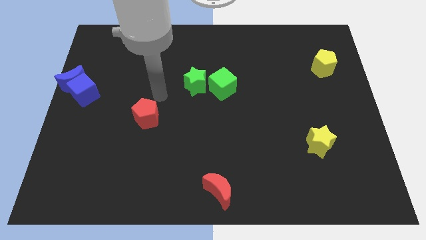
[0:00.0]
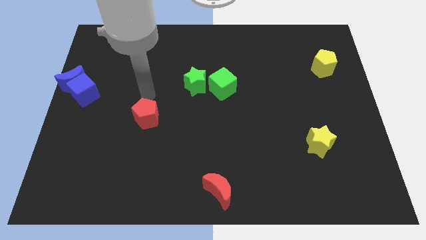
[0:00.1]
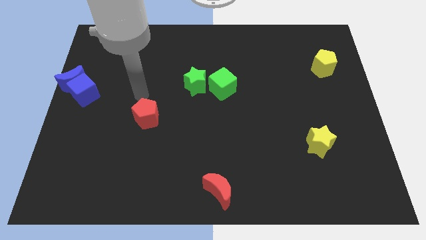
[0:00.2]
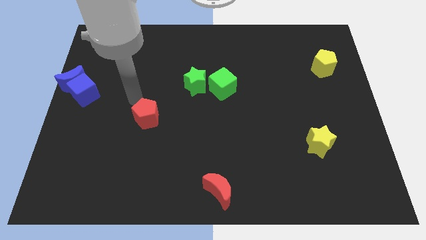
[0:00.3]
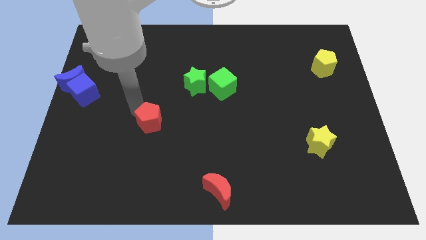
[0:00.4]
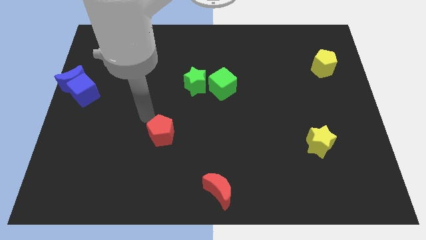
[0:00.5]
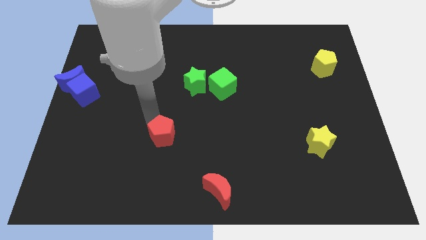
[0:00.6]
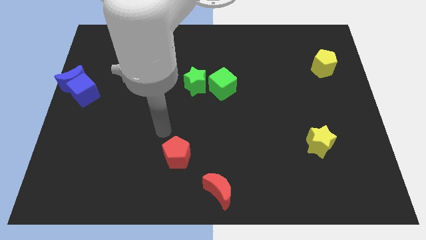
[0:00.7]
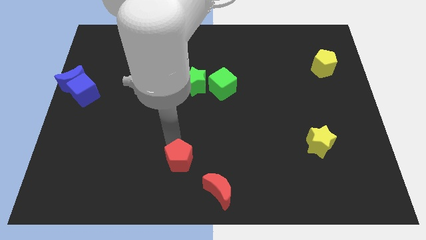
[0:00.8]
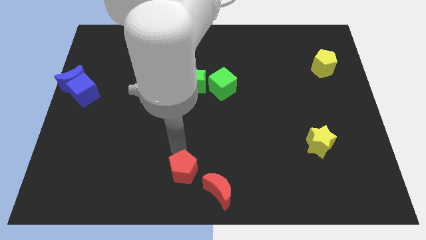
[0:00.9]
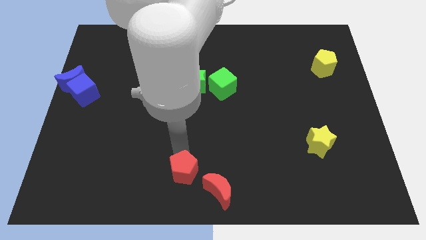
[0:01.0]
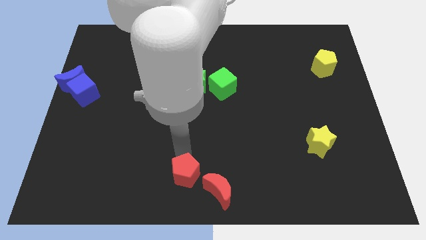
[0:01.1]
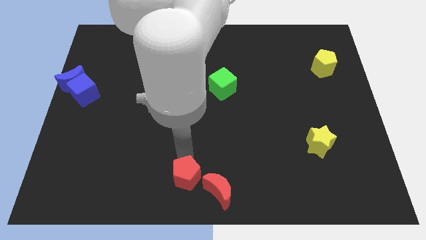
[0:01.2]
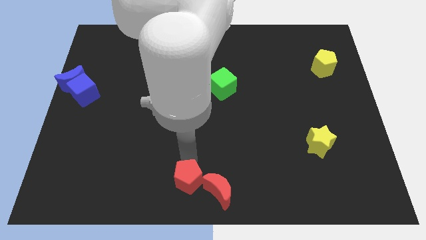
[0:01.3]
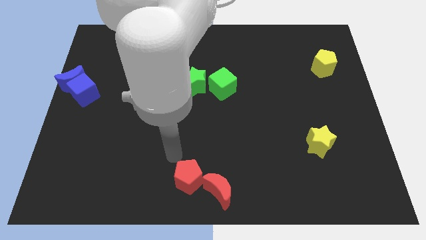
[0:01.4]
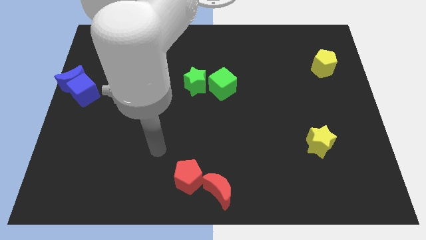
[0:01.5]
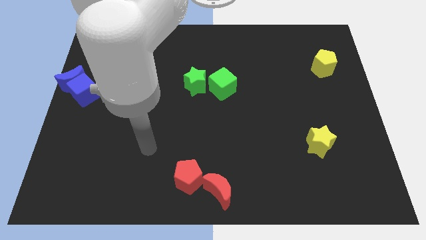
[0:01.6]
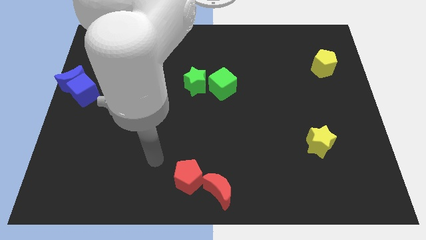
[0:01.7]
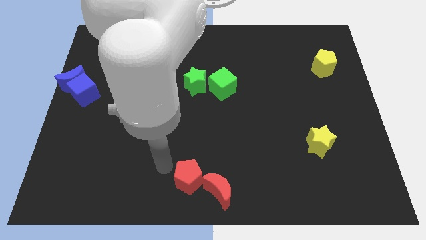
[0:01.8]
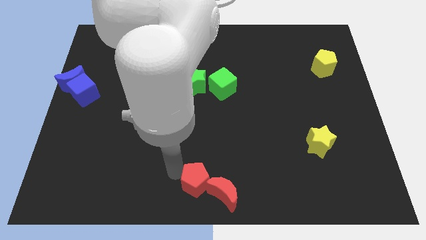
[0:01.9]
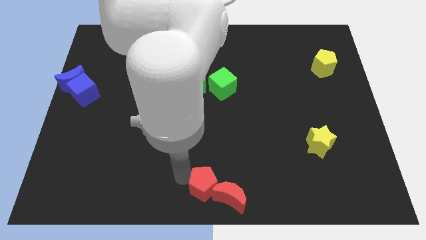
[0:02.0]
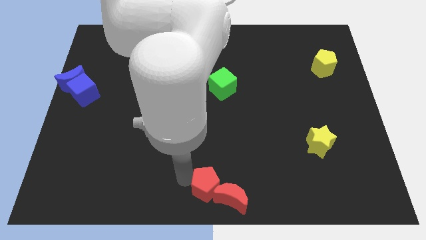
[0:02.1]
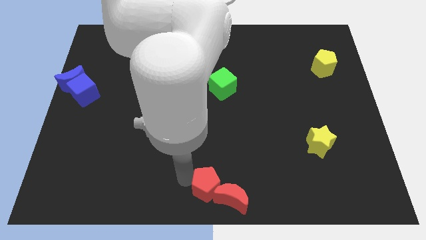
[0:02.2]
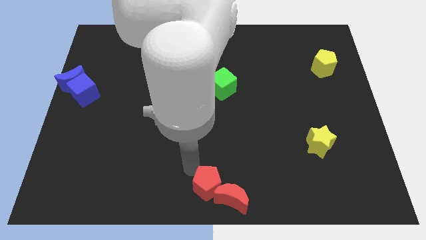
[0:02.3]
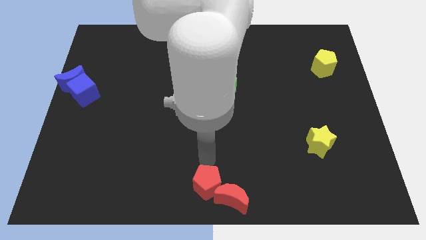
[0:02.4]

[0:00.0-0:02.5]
slide red pentagon into the red moon

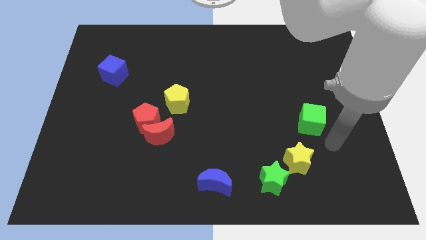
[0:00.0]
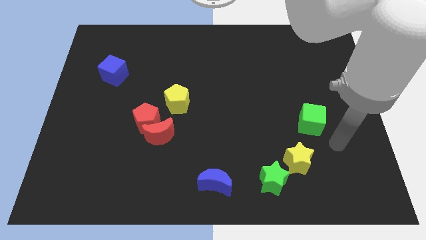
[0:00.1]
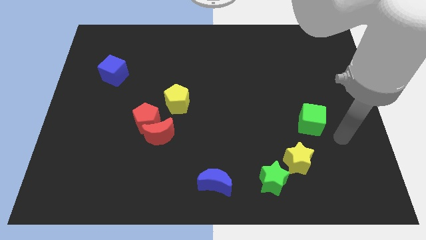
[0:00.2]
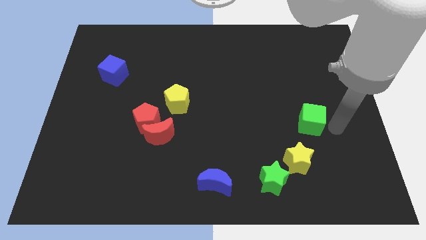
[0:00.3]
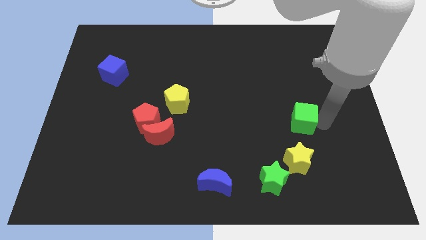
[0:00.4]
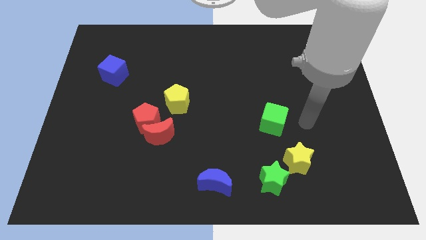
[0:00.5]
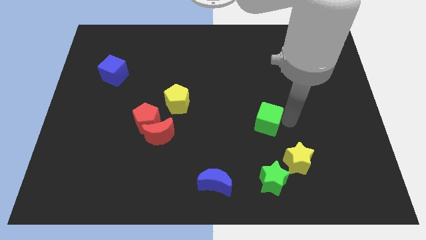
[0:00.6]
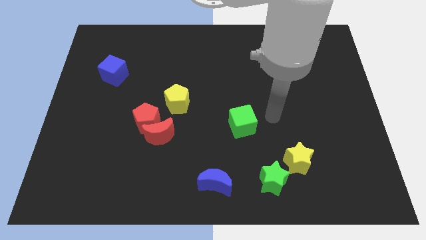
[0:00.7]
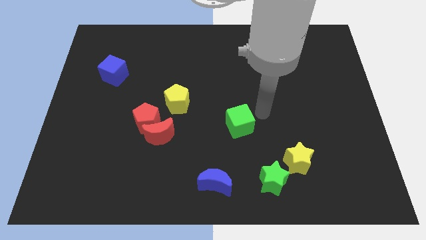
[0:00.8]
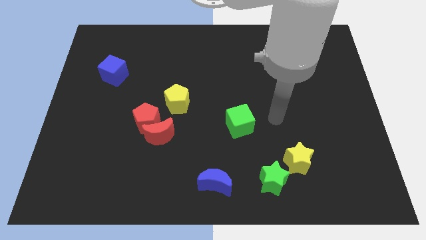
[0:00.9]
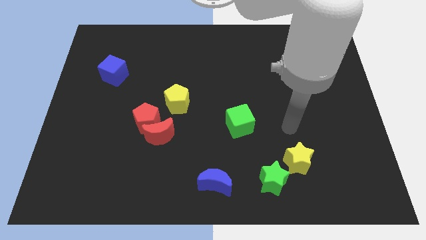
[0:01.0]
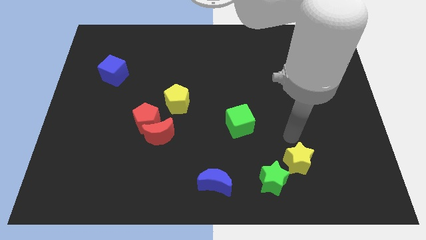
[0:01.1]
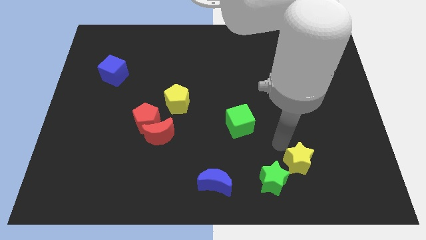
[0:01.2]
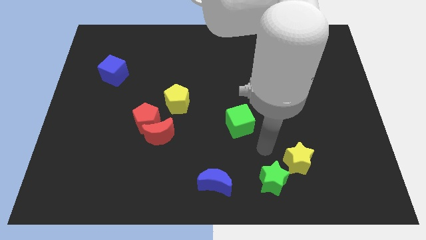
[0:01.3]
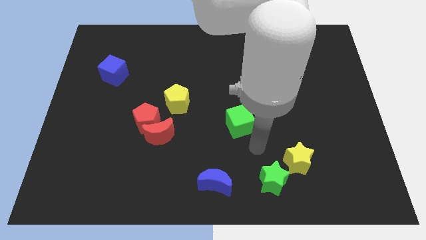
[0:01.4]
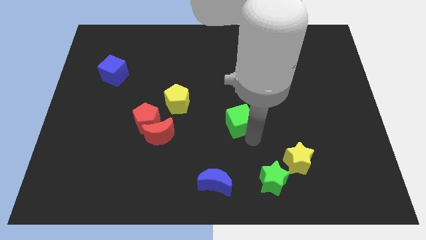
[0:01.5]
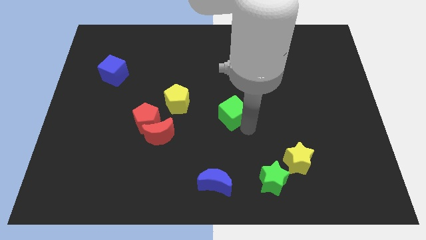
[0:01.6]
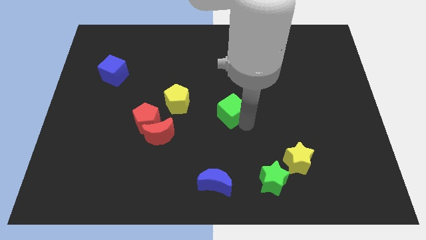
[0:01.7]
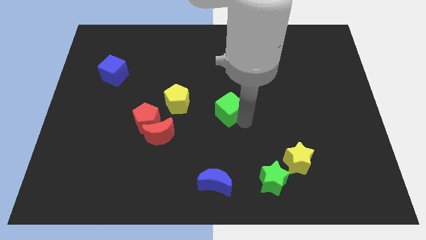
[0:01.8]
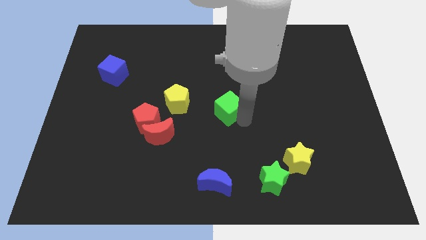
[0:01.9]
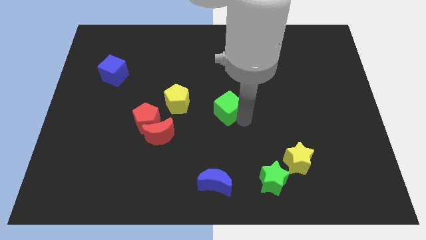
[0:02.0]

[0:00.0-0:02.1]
push the green cube towards the center

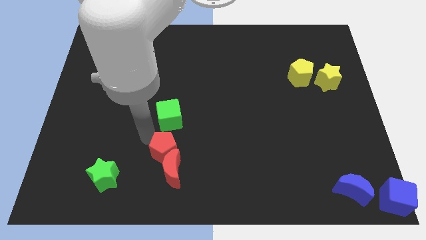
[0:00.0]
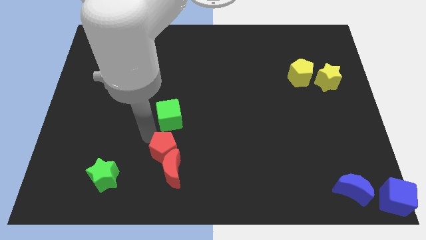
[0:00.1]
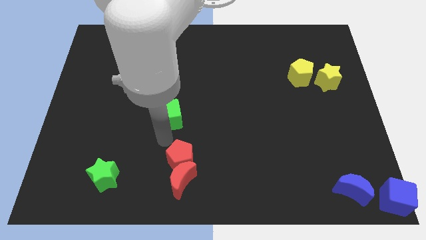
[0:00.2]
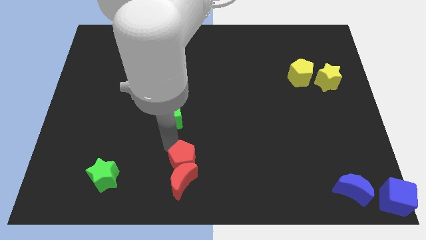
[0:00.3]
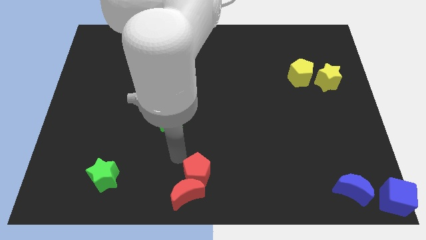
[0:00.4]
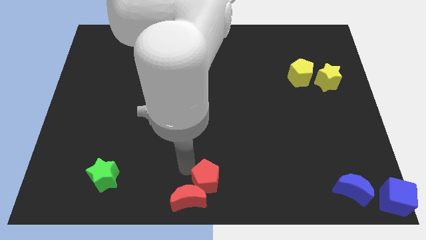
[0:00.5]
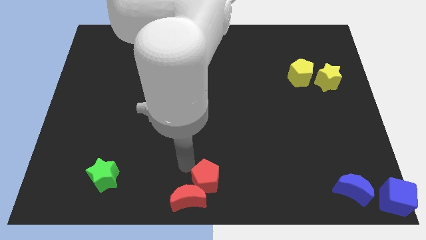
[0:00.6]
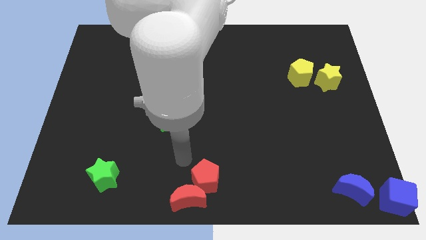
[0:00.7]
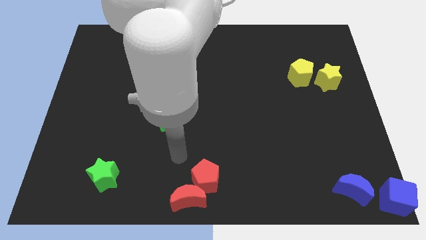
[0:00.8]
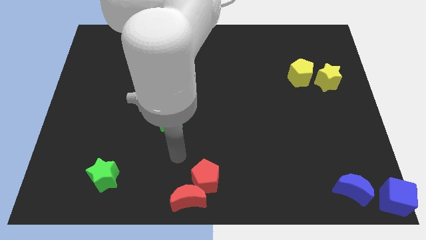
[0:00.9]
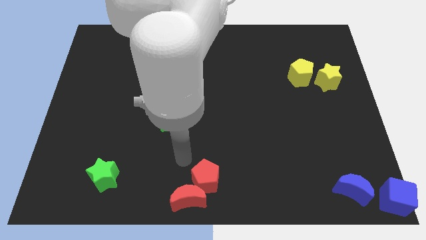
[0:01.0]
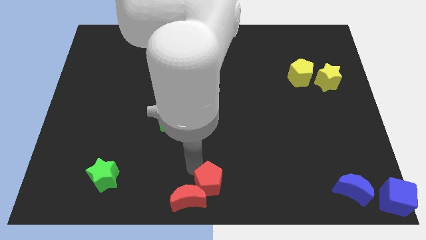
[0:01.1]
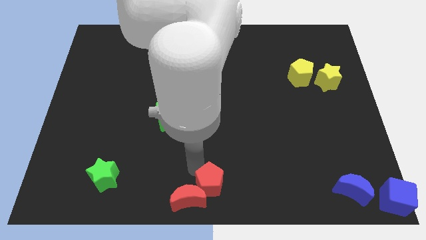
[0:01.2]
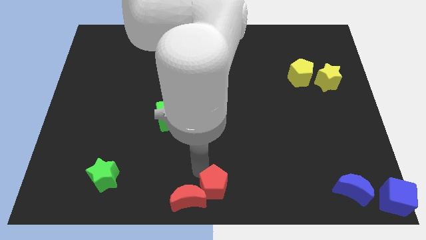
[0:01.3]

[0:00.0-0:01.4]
move the red blocks to the bottom center

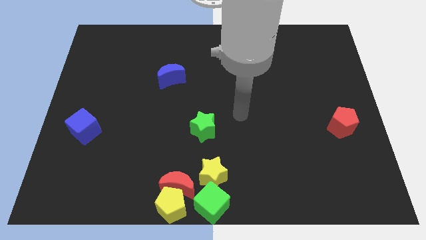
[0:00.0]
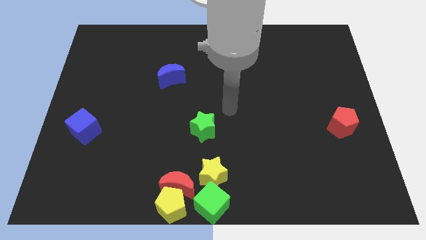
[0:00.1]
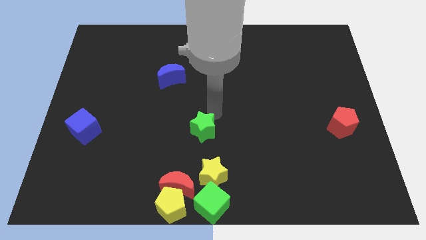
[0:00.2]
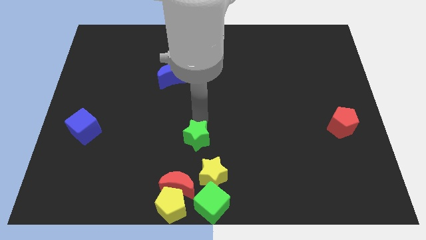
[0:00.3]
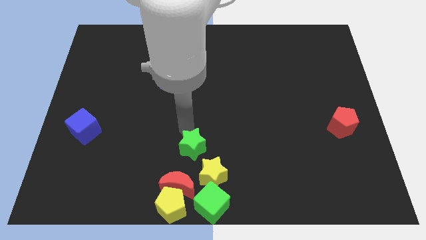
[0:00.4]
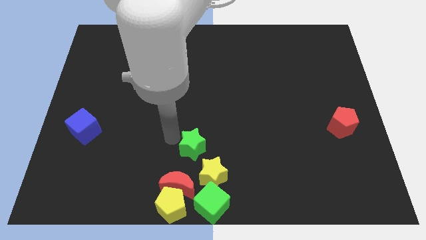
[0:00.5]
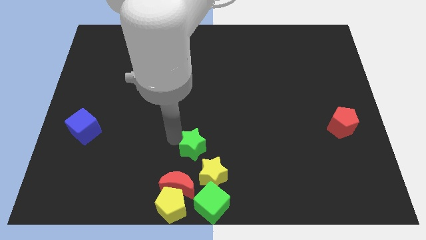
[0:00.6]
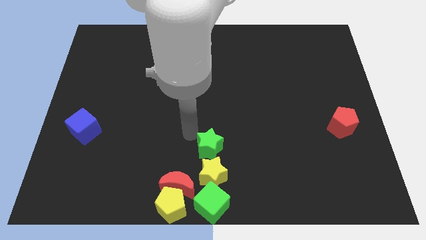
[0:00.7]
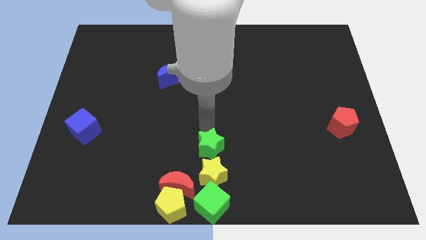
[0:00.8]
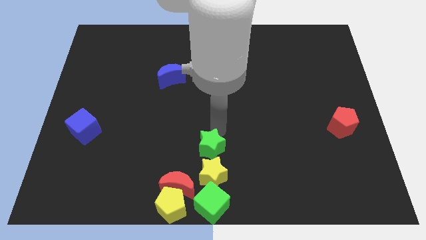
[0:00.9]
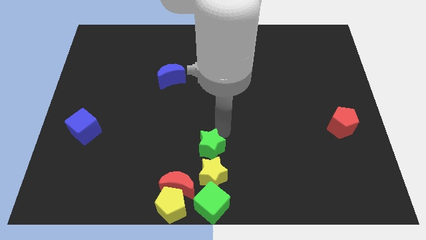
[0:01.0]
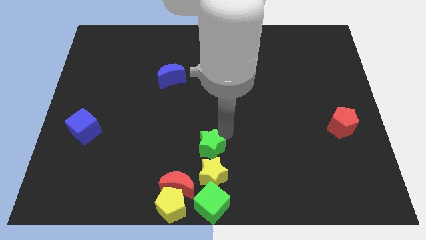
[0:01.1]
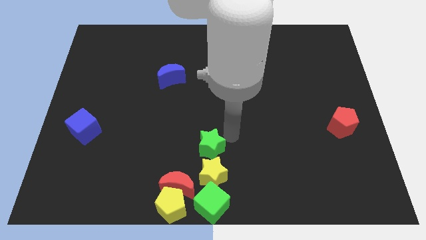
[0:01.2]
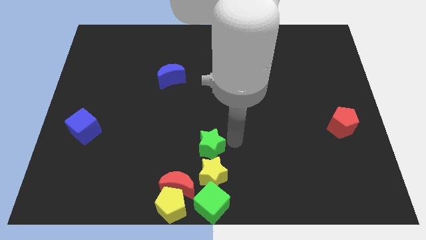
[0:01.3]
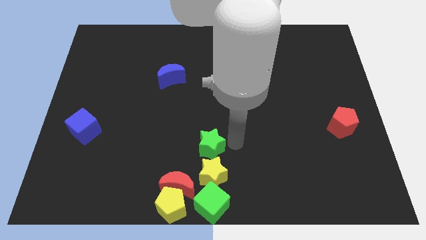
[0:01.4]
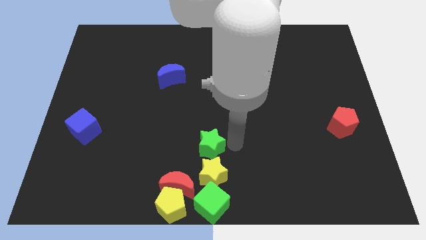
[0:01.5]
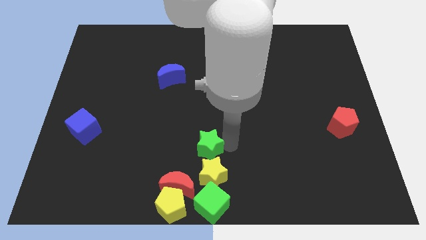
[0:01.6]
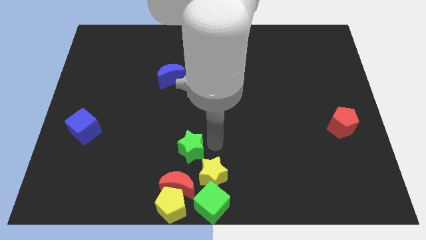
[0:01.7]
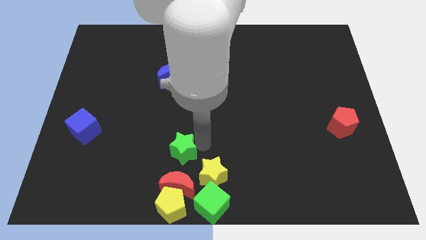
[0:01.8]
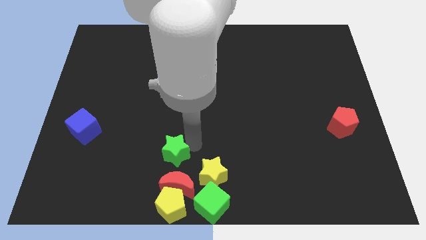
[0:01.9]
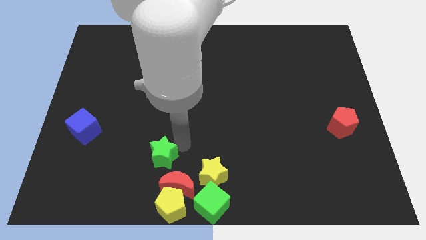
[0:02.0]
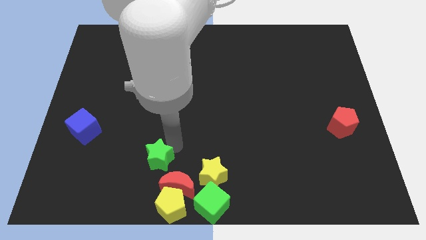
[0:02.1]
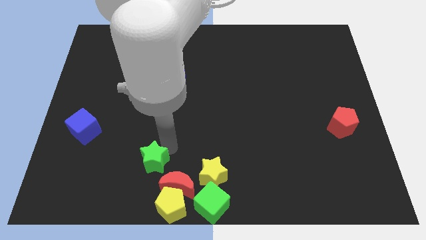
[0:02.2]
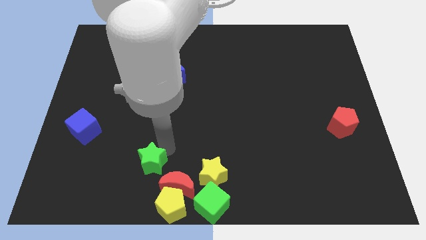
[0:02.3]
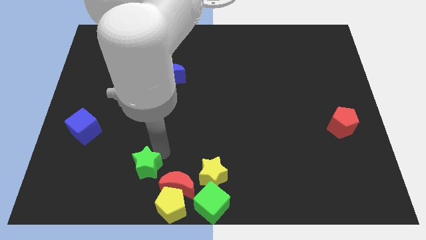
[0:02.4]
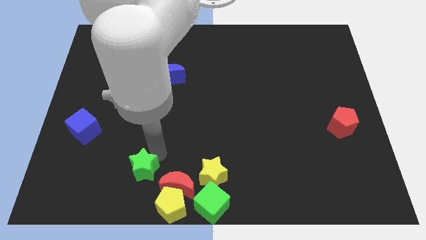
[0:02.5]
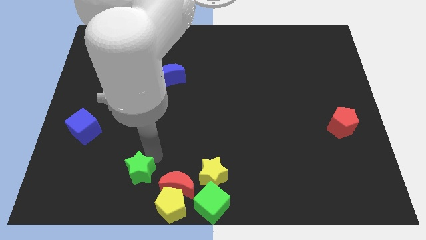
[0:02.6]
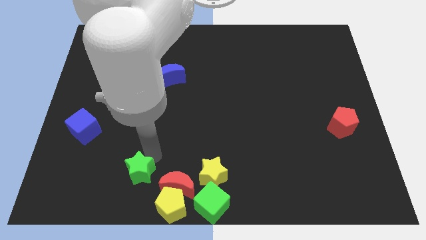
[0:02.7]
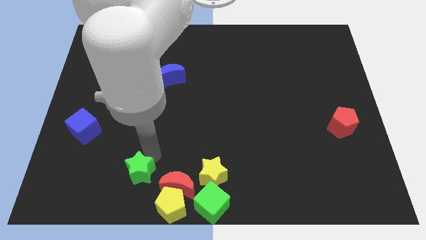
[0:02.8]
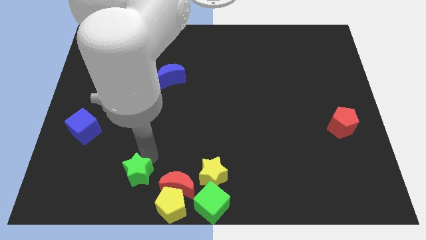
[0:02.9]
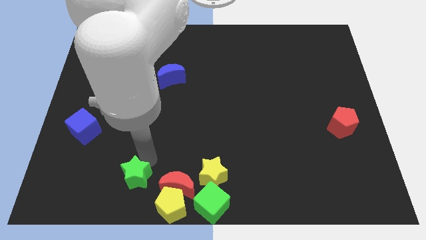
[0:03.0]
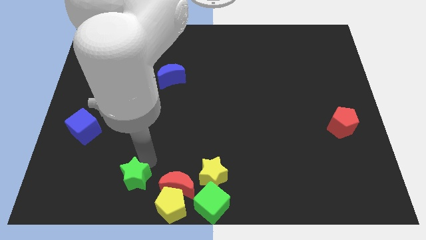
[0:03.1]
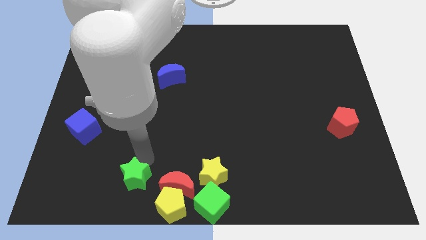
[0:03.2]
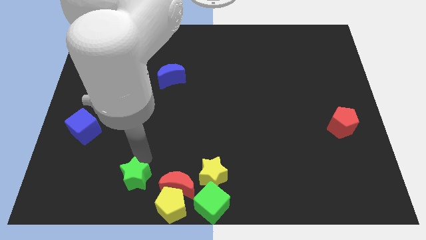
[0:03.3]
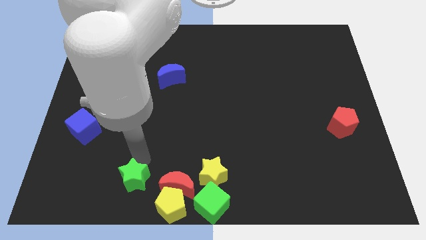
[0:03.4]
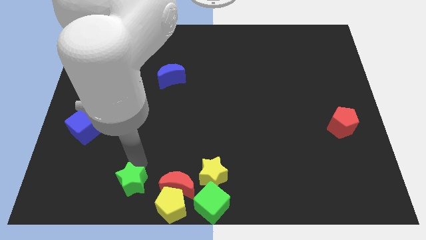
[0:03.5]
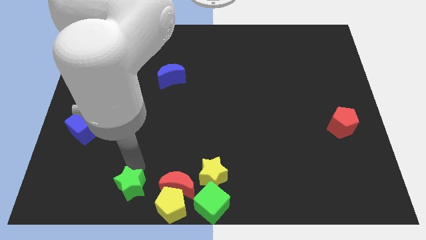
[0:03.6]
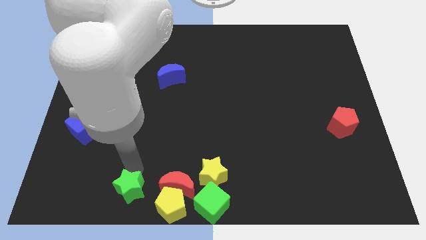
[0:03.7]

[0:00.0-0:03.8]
push the green star to the left side of the red moon
